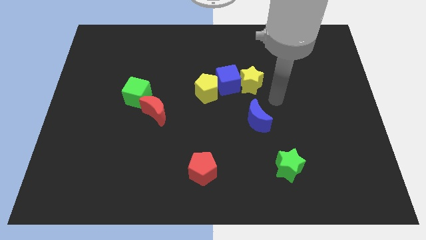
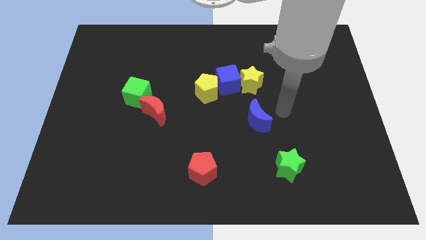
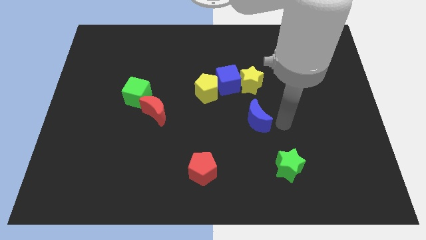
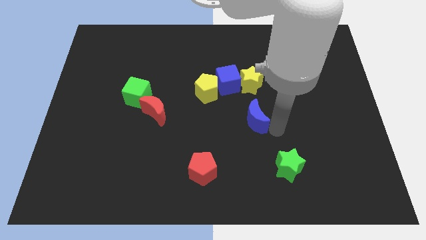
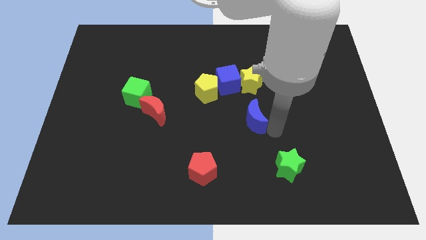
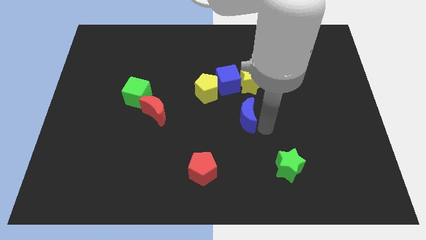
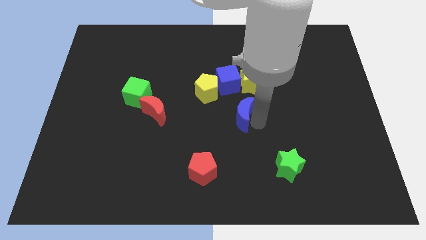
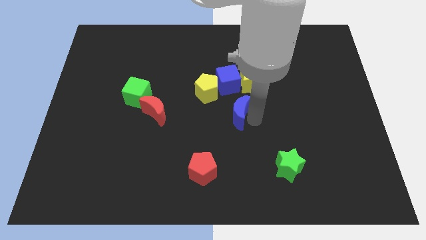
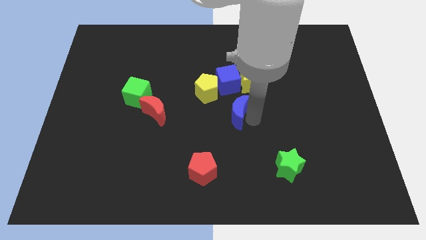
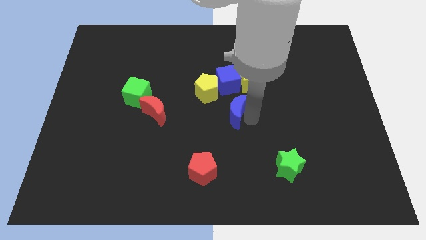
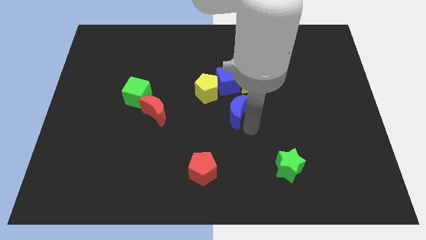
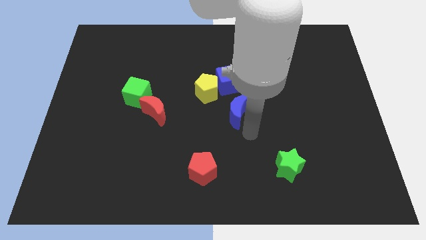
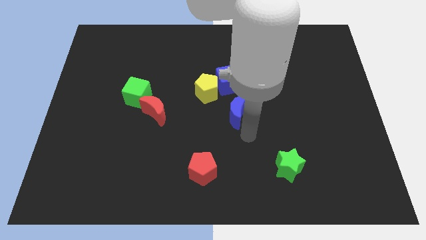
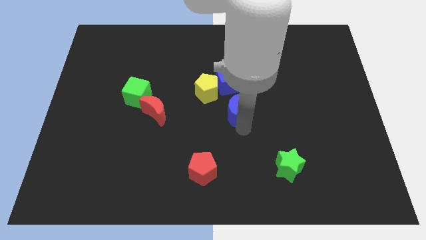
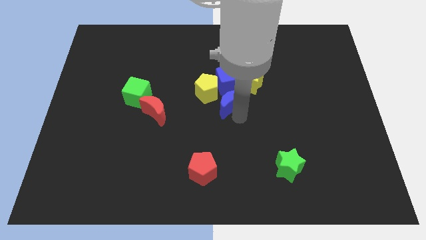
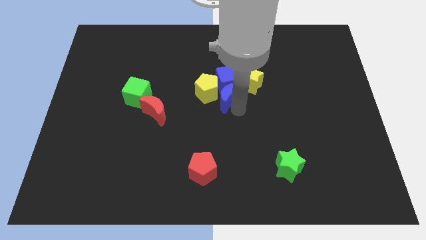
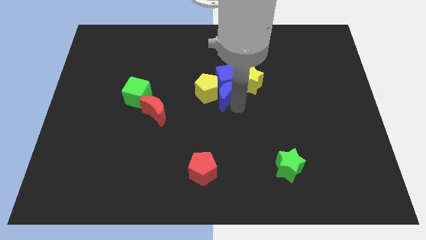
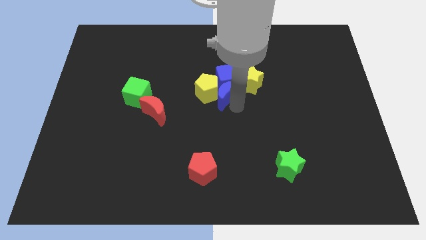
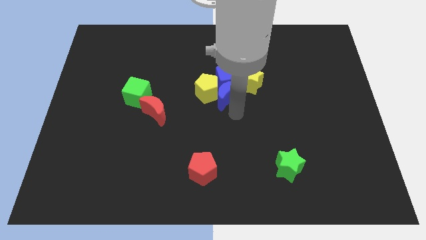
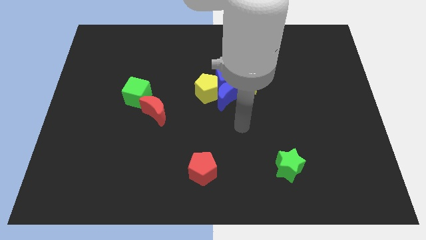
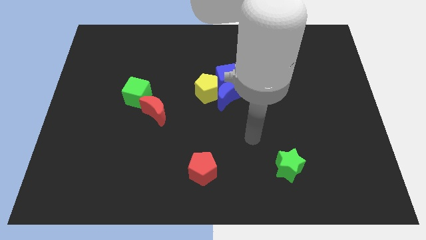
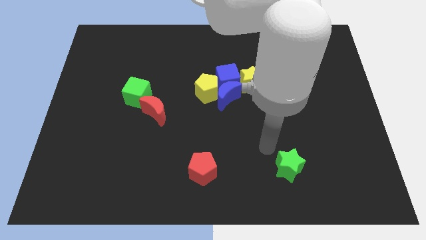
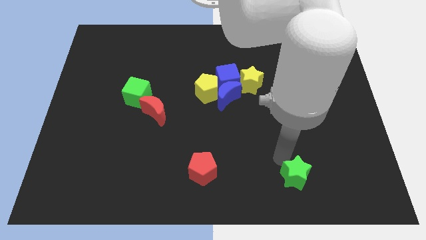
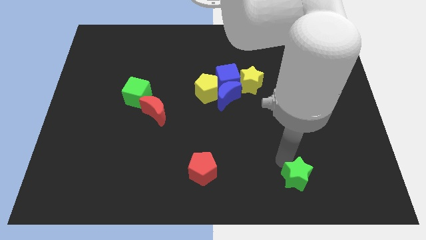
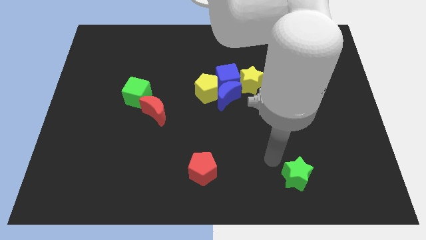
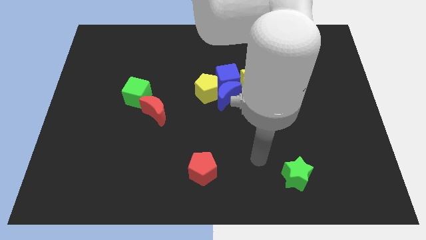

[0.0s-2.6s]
push blue moon into blue cube

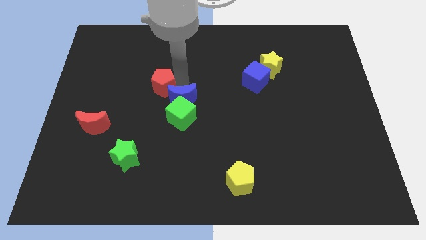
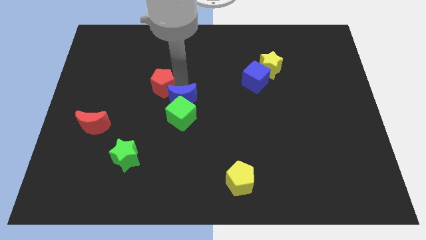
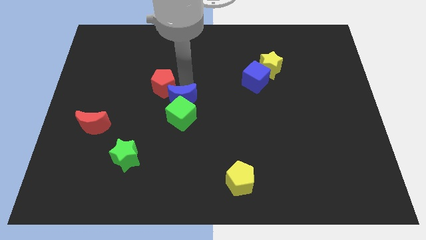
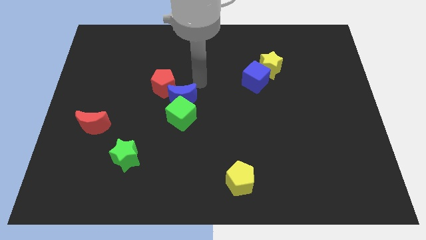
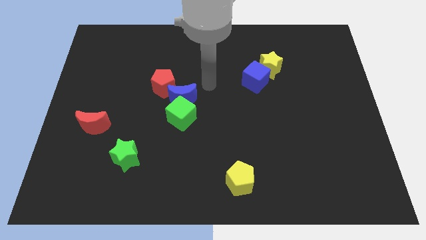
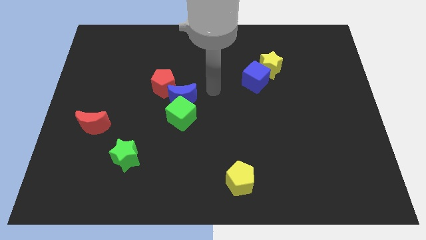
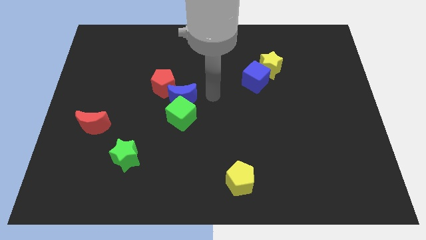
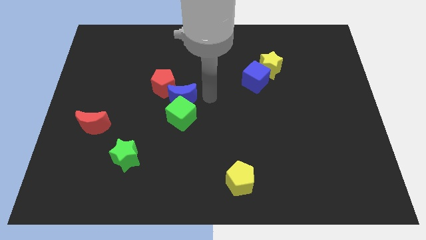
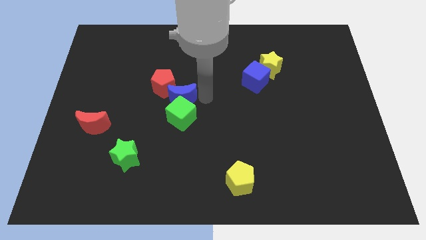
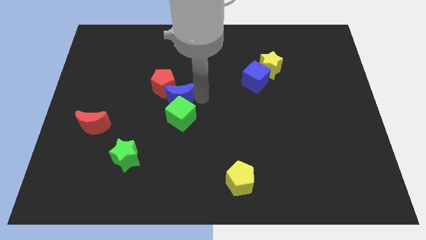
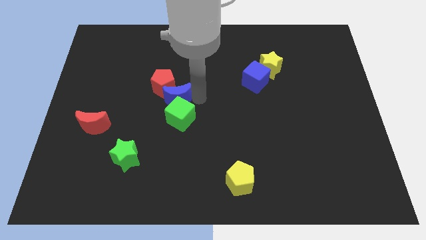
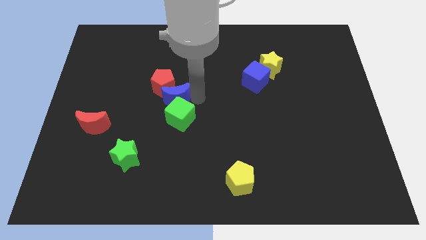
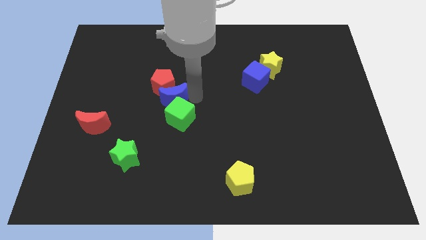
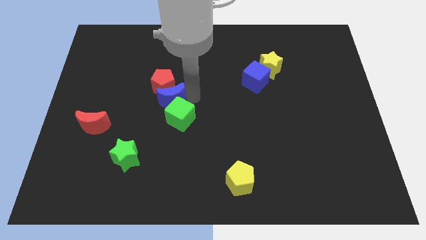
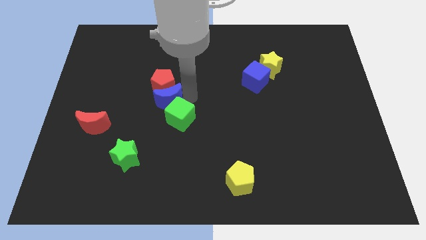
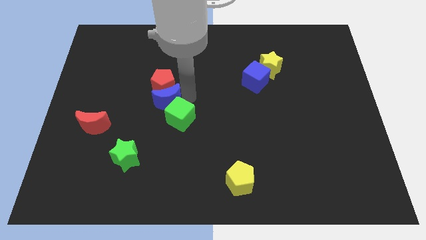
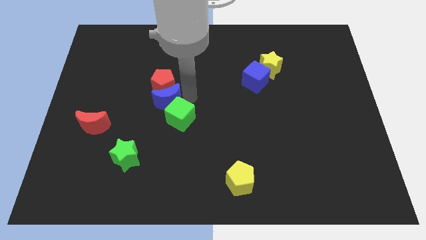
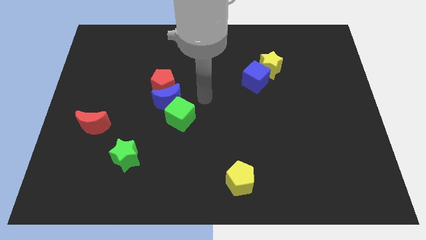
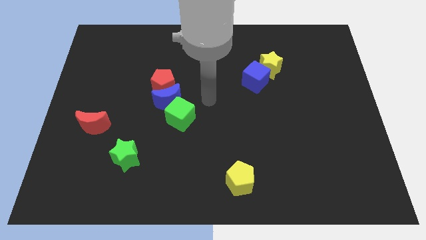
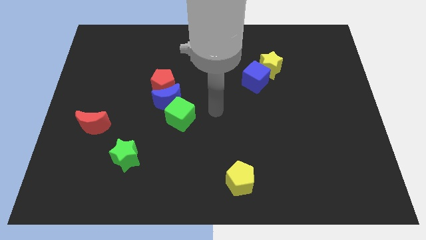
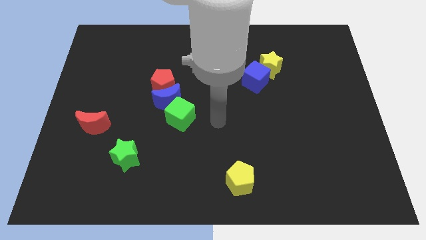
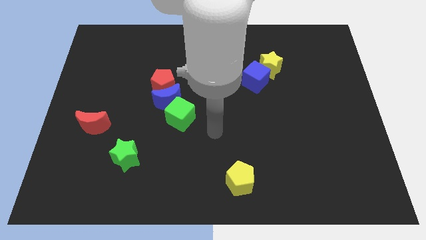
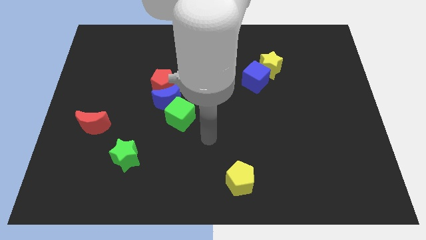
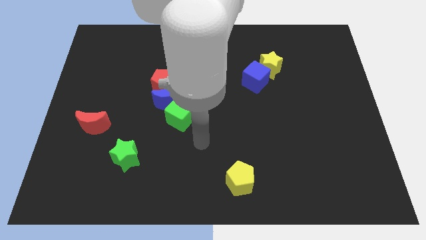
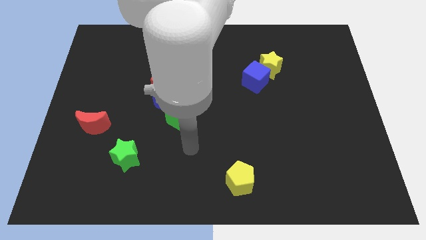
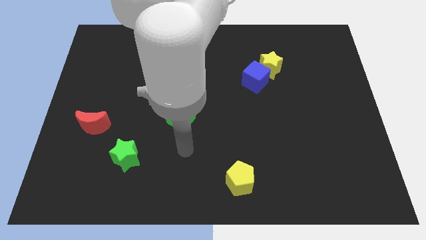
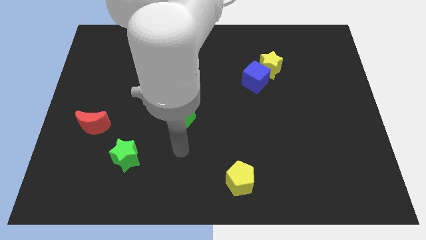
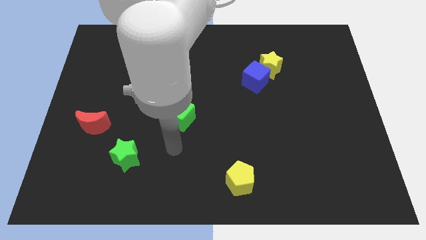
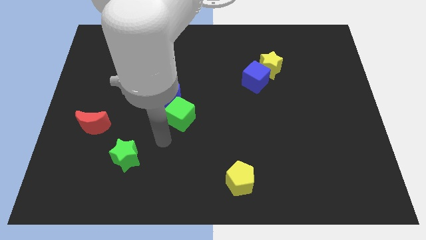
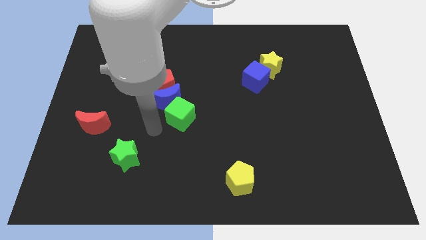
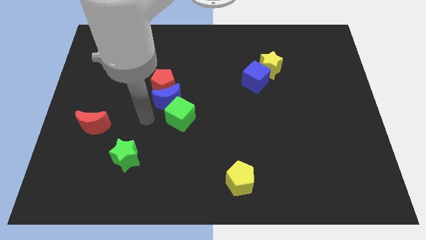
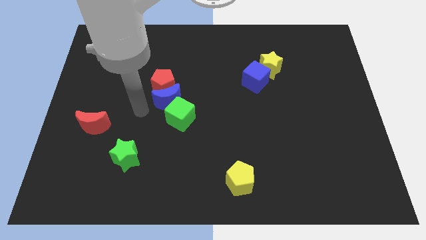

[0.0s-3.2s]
push the blue crescent in between the red pentagon and green cube

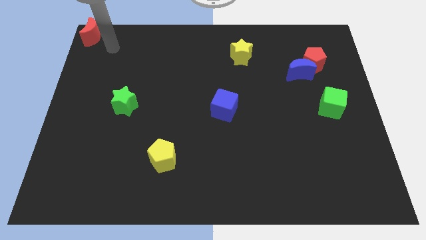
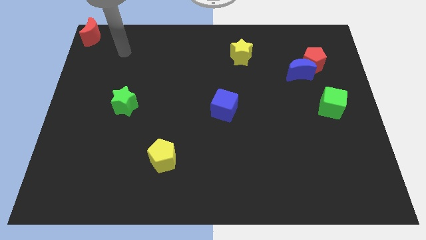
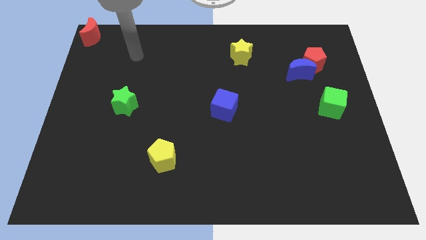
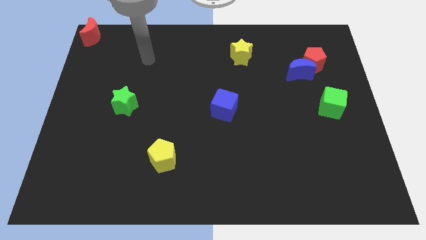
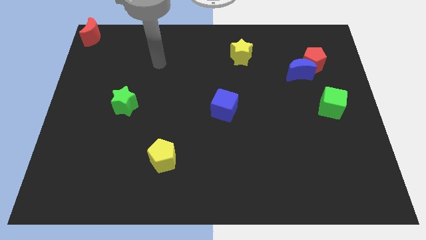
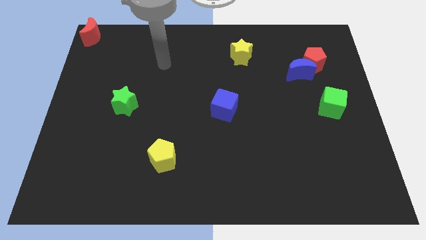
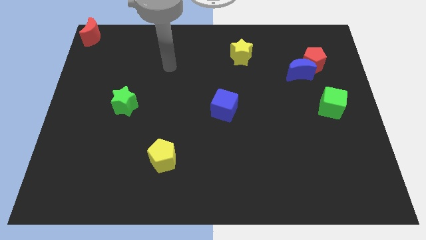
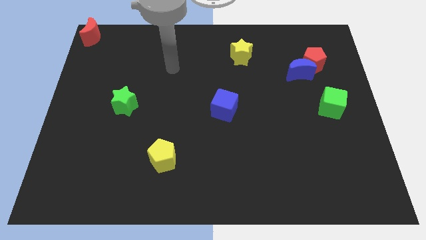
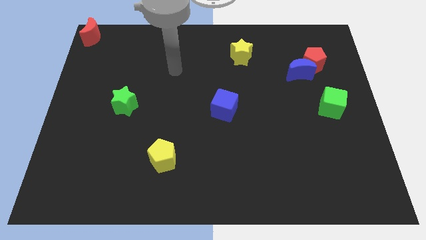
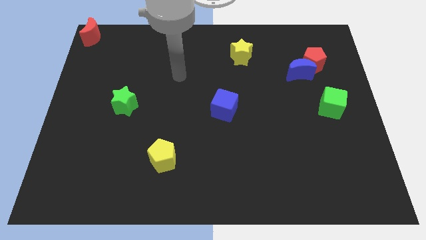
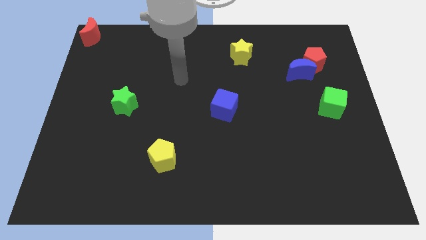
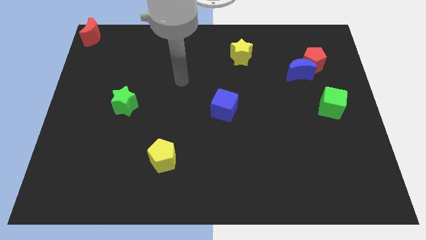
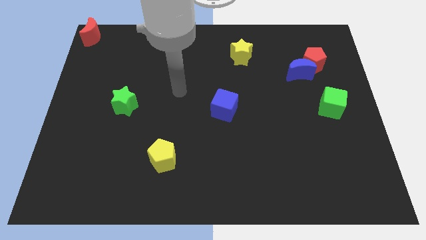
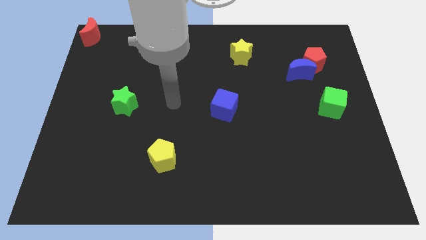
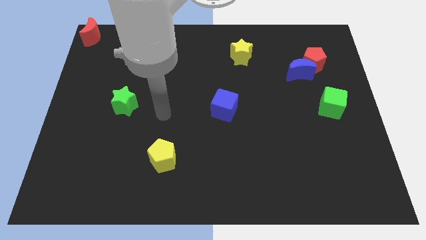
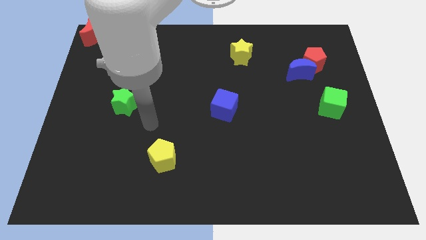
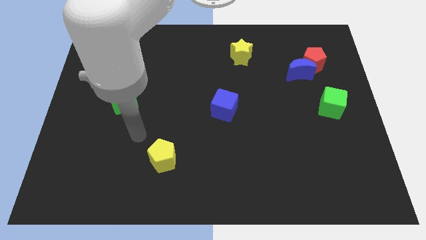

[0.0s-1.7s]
point your arm in between the yellow pentagon and green star

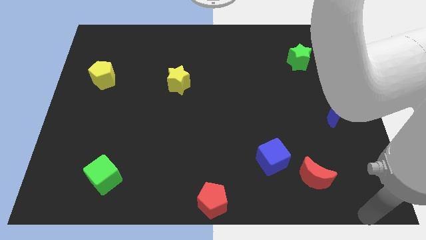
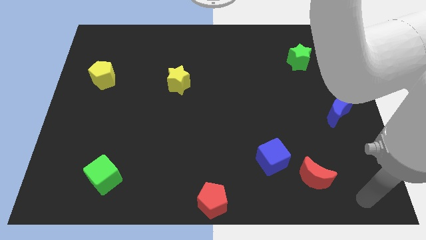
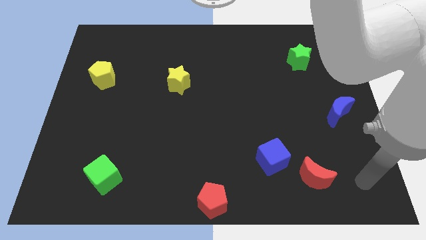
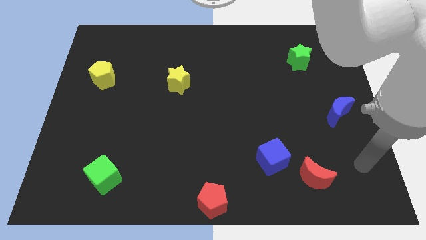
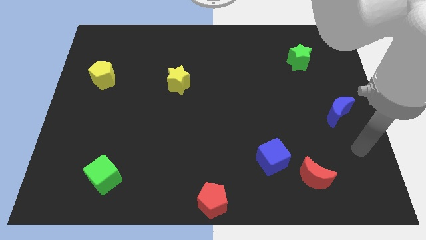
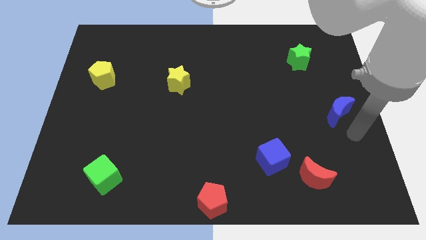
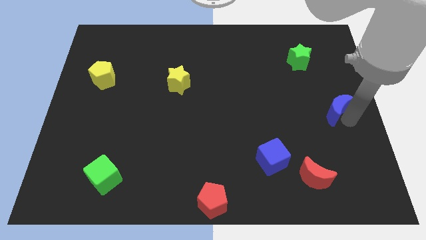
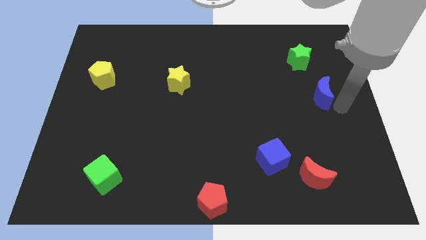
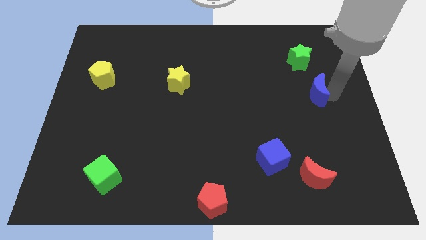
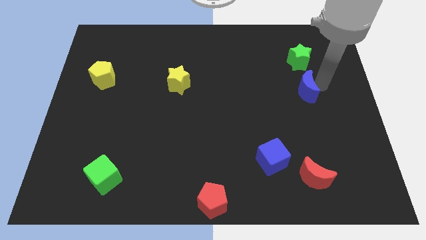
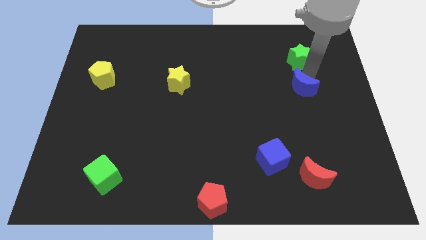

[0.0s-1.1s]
push the blue crescent towards the bottom side of the green star

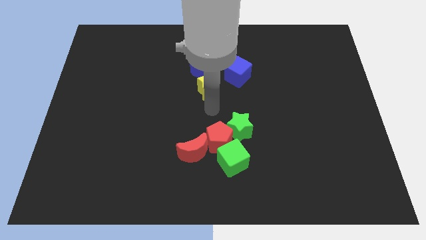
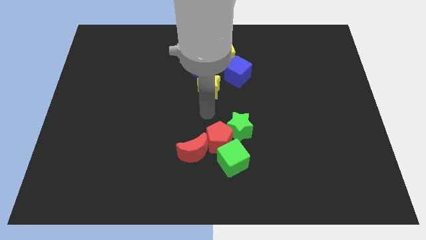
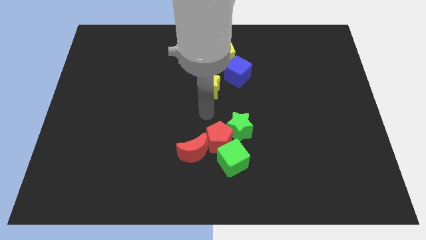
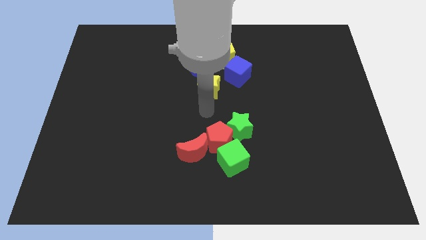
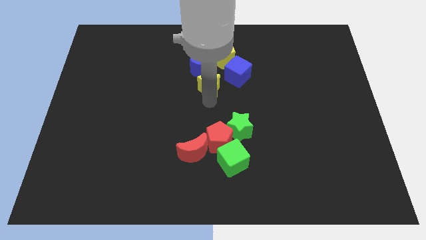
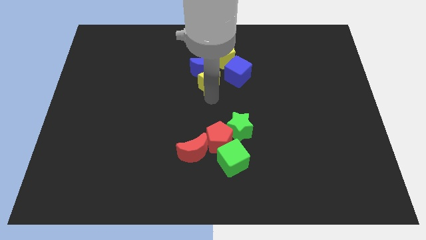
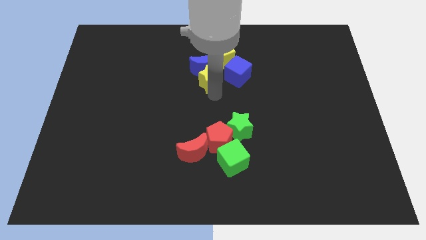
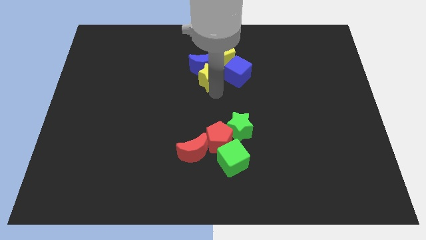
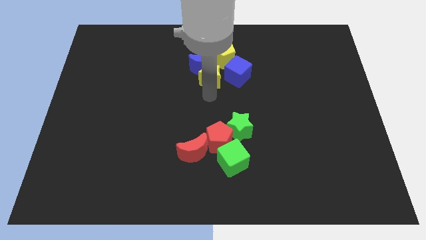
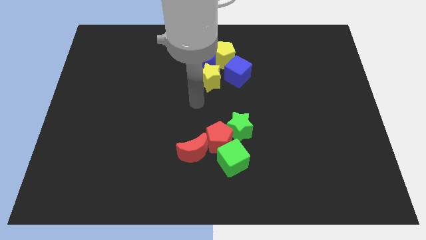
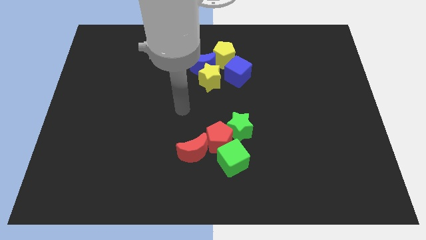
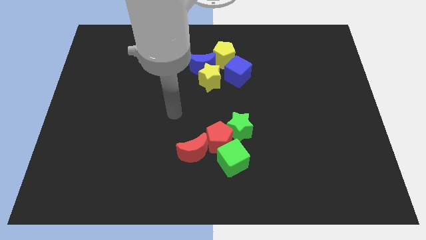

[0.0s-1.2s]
slightly push the yellow star towards blue half moon
